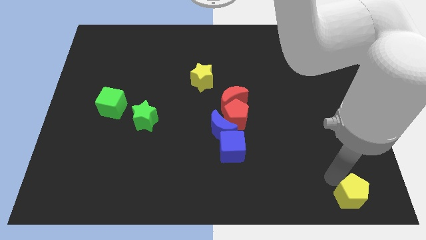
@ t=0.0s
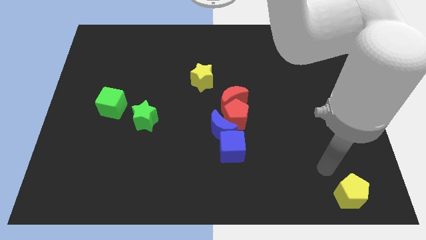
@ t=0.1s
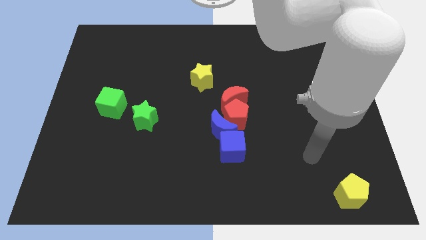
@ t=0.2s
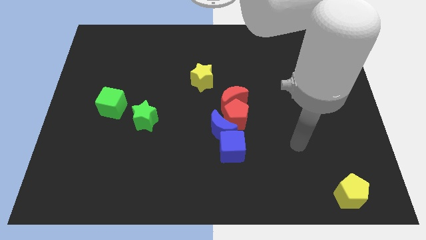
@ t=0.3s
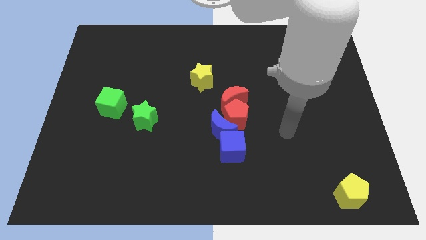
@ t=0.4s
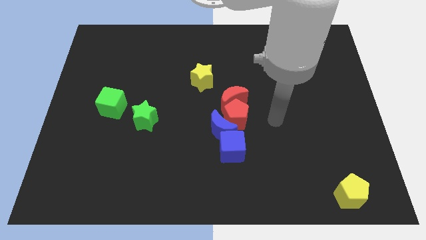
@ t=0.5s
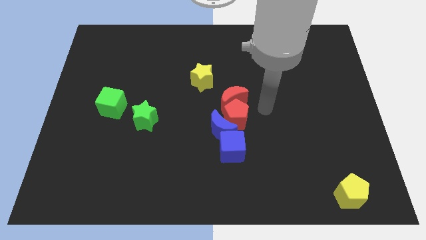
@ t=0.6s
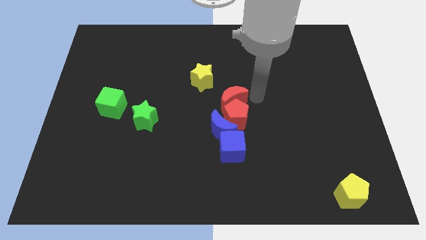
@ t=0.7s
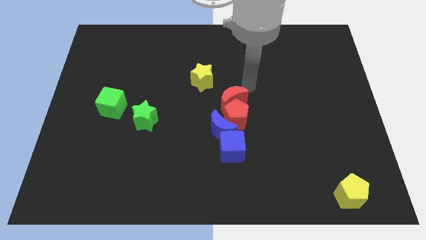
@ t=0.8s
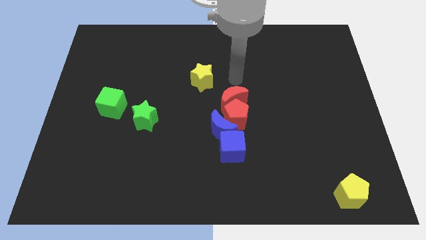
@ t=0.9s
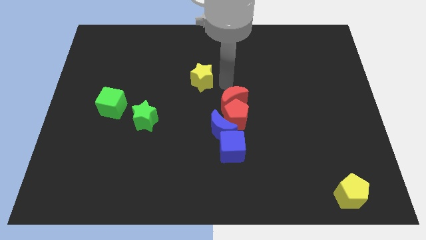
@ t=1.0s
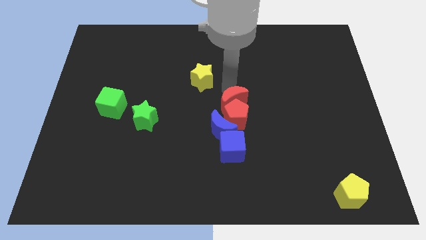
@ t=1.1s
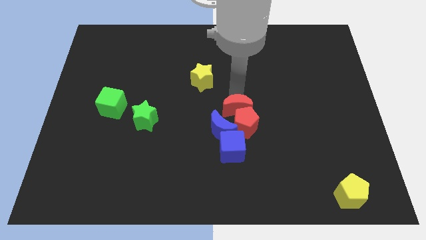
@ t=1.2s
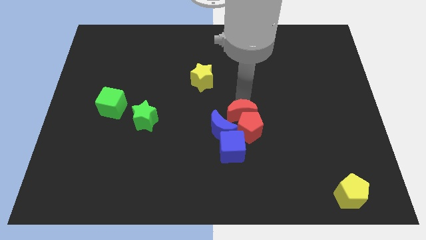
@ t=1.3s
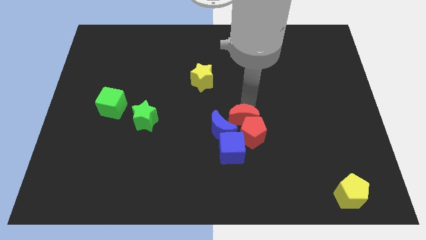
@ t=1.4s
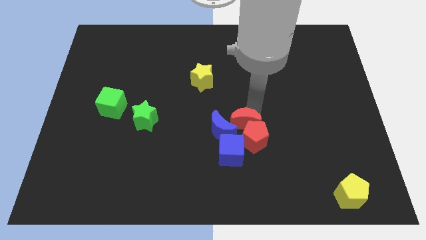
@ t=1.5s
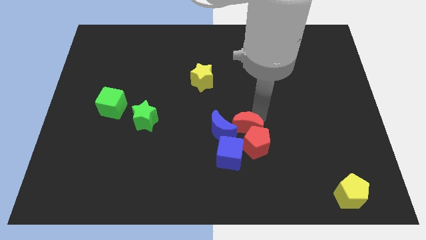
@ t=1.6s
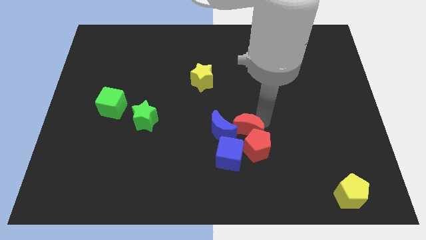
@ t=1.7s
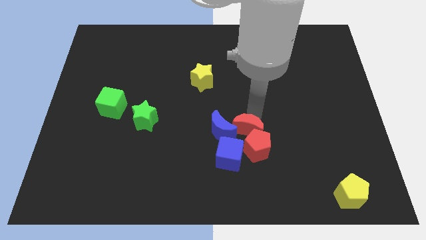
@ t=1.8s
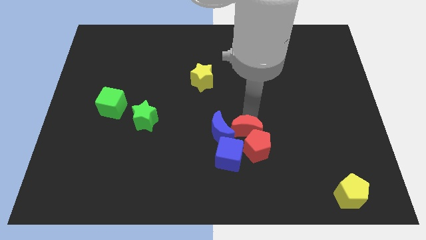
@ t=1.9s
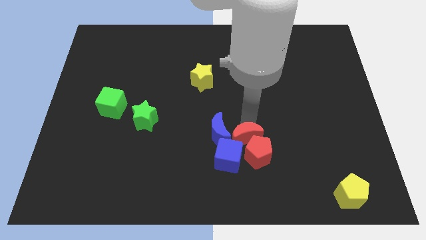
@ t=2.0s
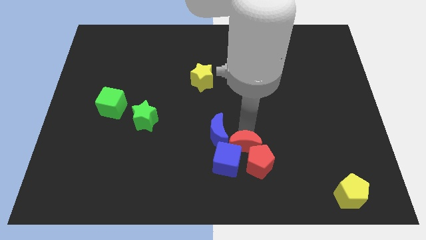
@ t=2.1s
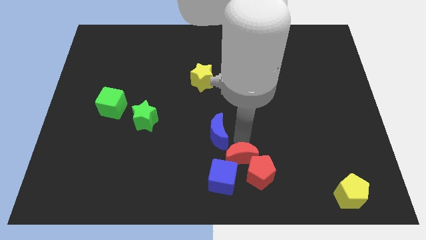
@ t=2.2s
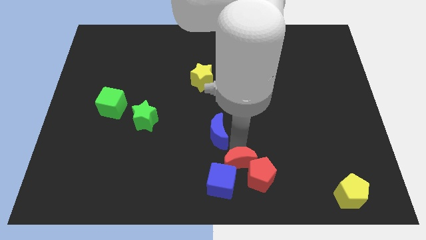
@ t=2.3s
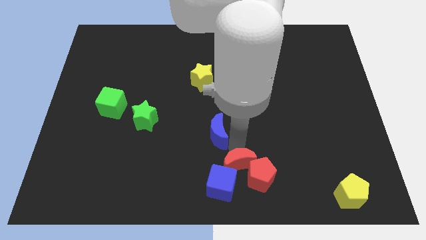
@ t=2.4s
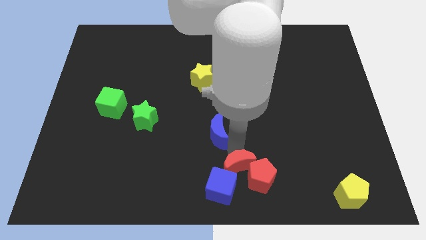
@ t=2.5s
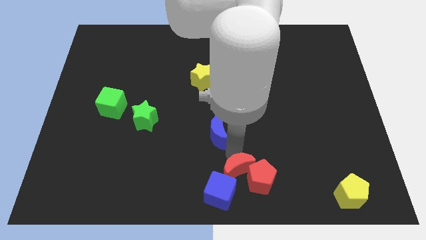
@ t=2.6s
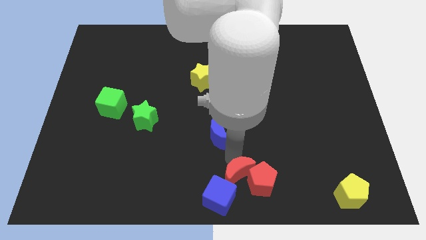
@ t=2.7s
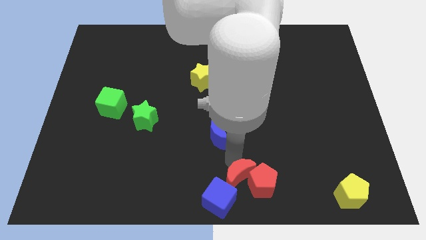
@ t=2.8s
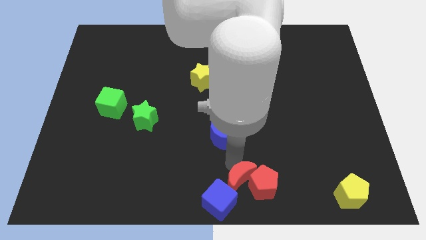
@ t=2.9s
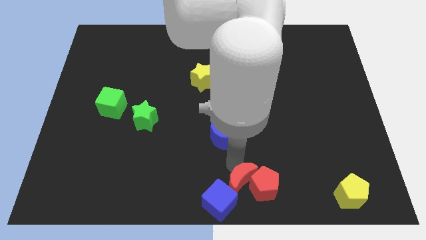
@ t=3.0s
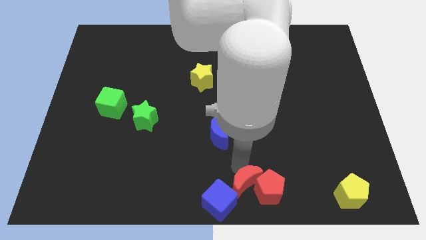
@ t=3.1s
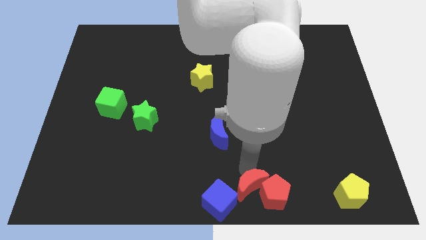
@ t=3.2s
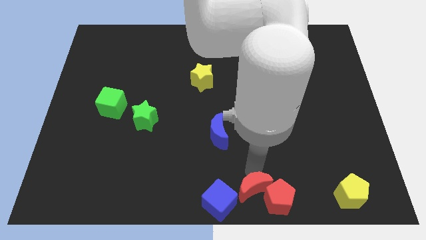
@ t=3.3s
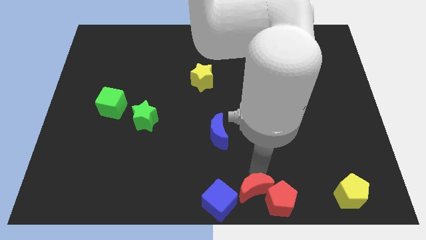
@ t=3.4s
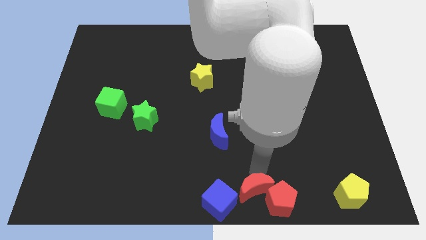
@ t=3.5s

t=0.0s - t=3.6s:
push the red blocks to the right of the blue cube

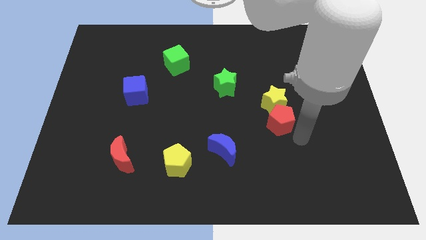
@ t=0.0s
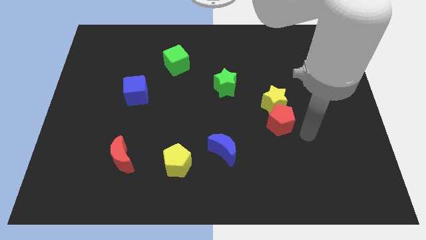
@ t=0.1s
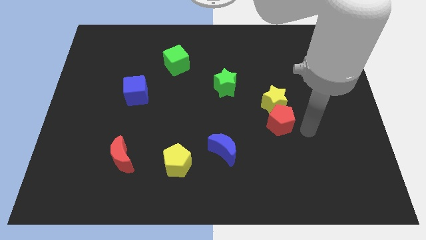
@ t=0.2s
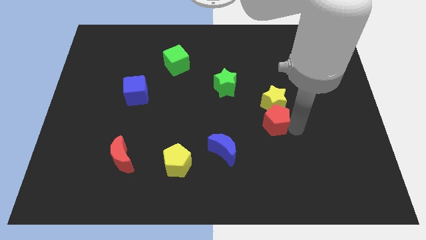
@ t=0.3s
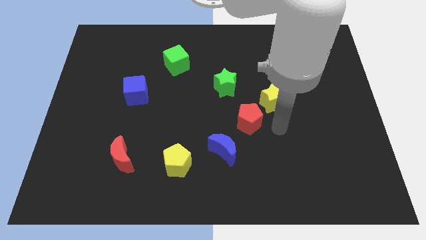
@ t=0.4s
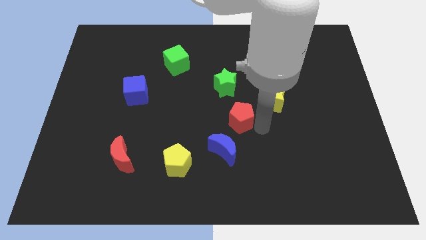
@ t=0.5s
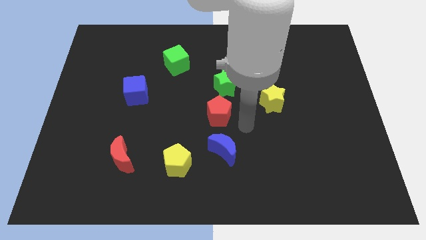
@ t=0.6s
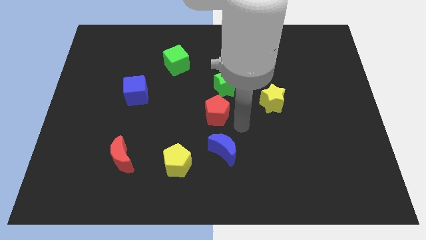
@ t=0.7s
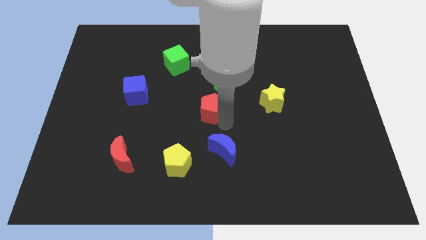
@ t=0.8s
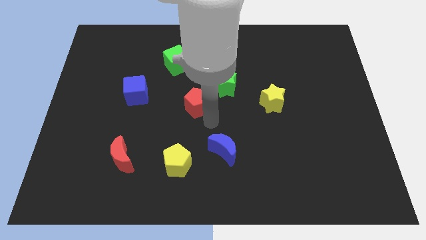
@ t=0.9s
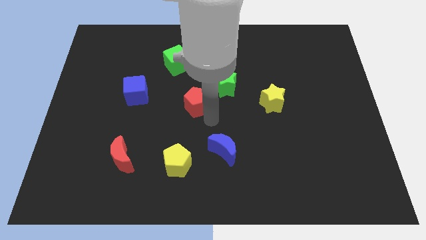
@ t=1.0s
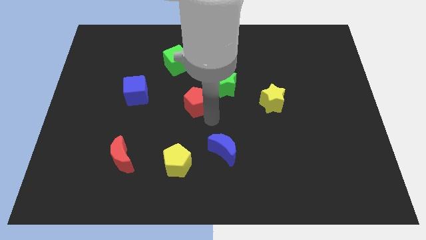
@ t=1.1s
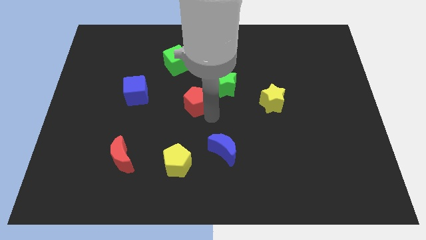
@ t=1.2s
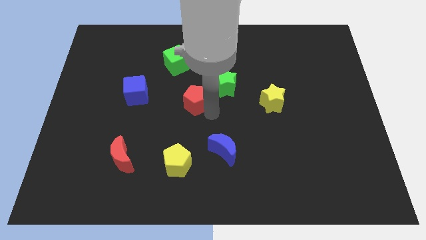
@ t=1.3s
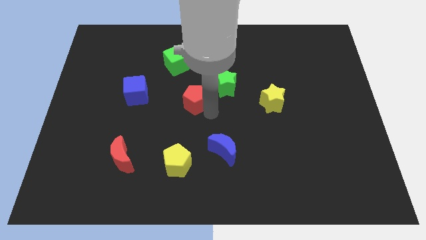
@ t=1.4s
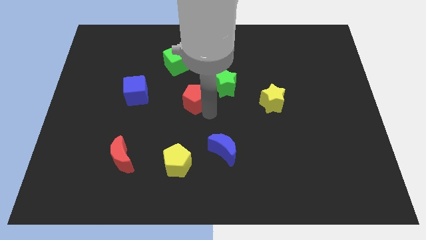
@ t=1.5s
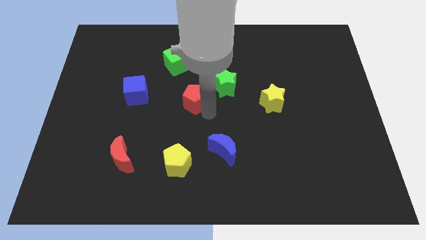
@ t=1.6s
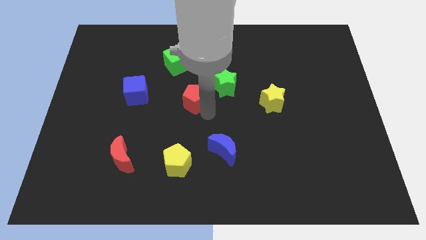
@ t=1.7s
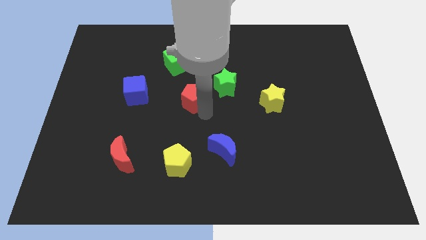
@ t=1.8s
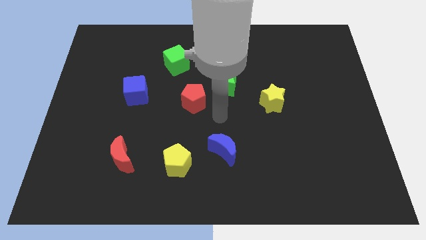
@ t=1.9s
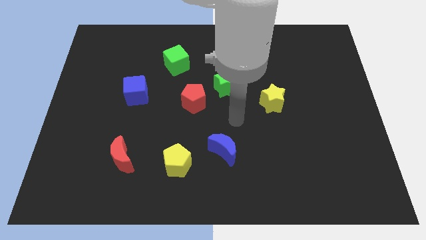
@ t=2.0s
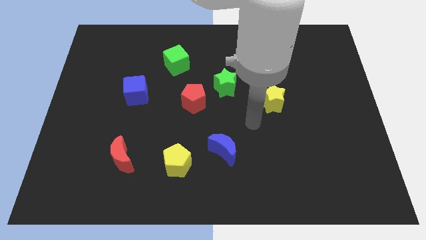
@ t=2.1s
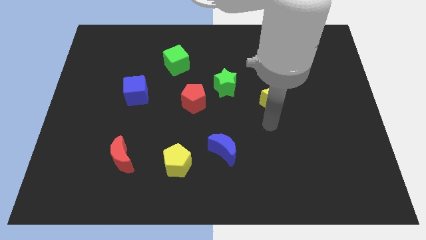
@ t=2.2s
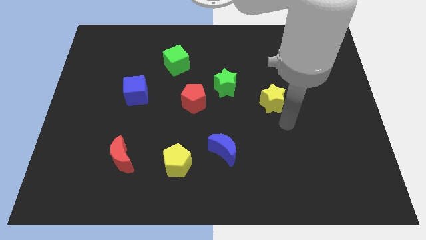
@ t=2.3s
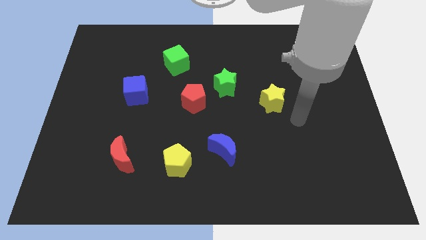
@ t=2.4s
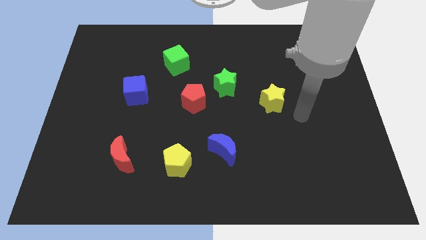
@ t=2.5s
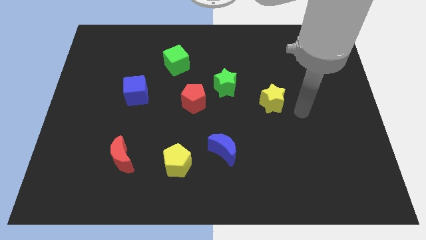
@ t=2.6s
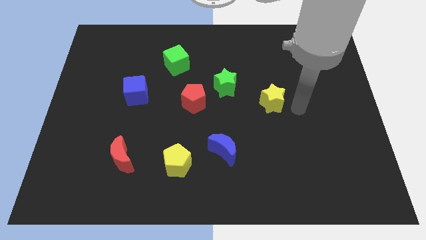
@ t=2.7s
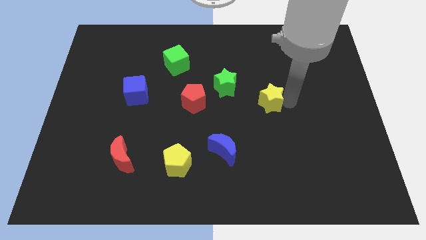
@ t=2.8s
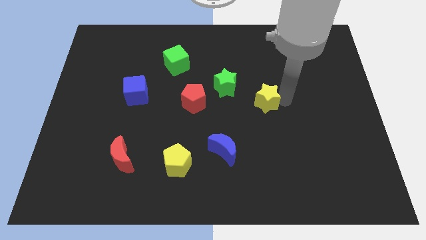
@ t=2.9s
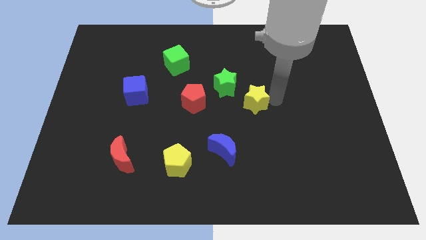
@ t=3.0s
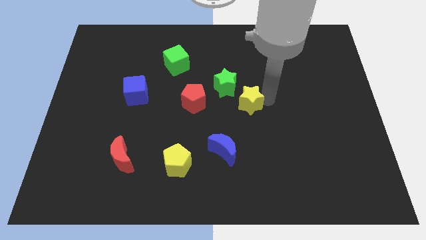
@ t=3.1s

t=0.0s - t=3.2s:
slide the red pentagon and yellow star horizontal to each other

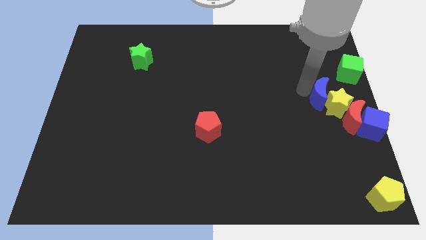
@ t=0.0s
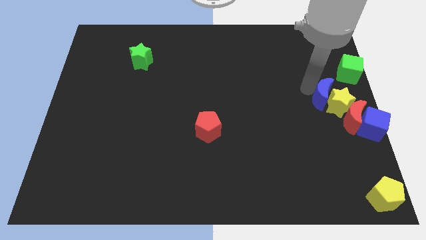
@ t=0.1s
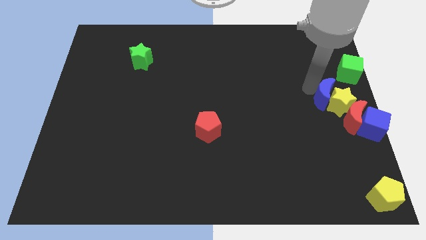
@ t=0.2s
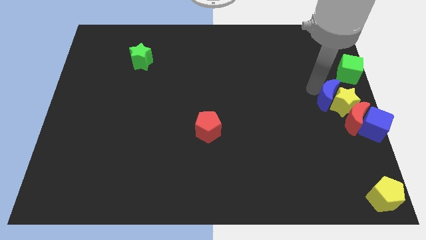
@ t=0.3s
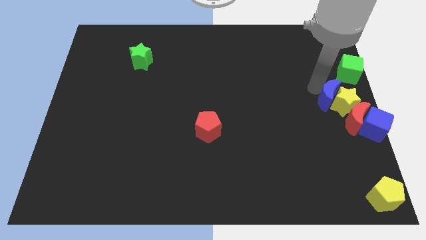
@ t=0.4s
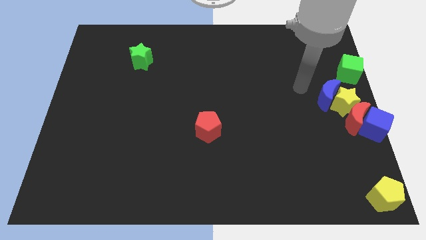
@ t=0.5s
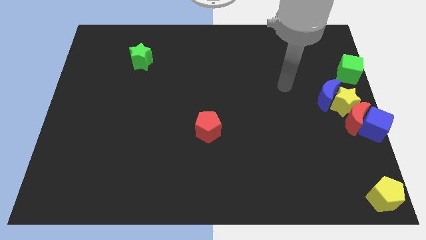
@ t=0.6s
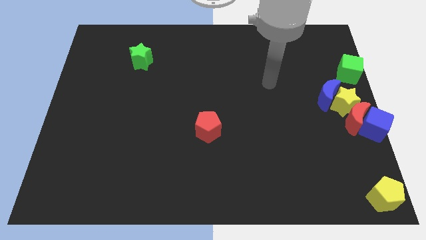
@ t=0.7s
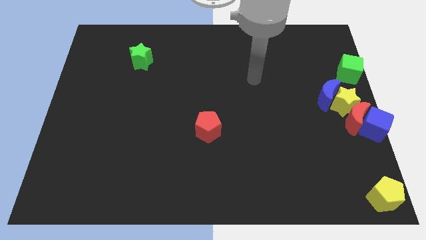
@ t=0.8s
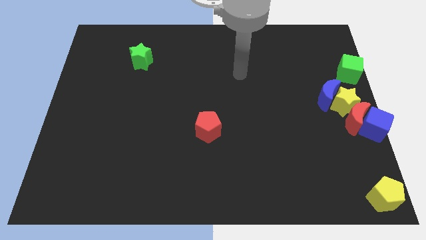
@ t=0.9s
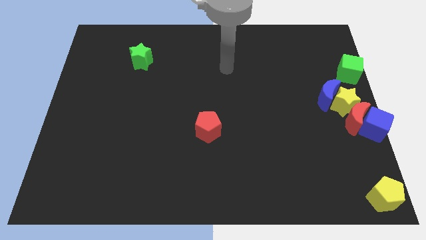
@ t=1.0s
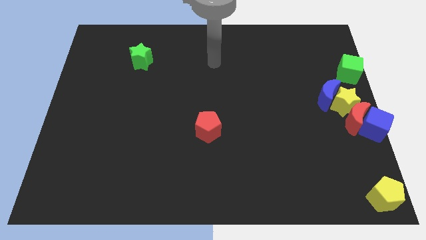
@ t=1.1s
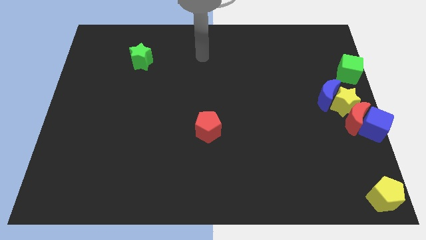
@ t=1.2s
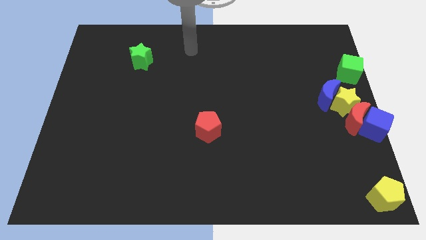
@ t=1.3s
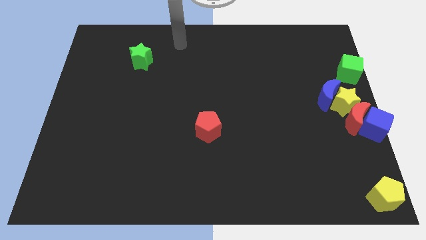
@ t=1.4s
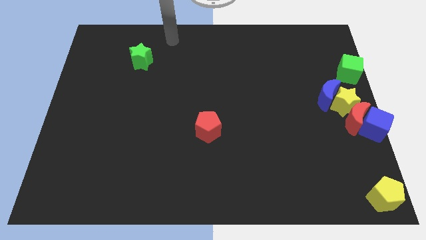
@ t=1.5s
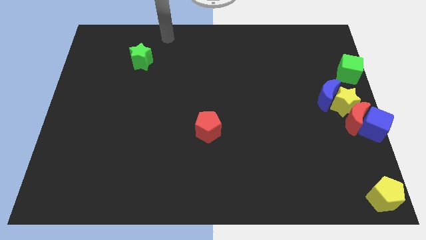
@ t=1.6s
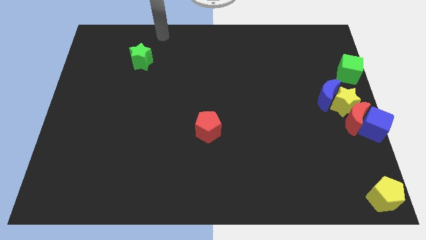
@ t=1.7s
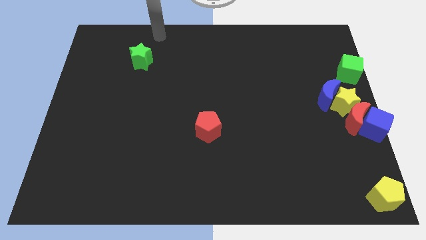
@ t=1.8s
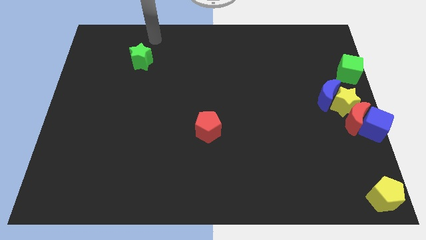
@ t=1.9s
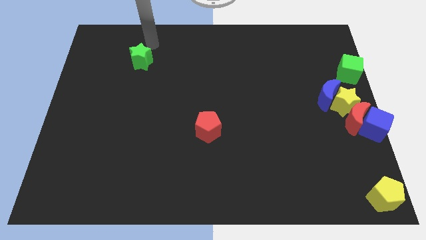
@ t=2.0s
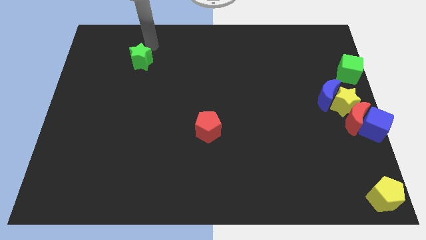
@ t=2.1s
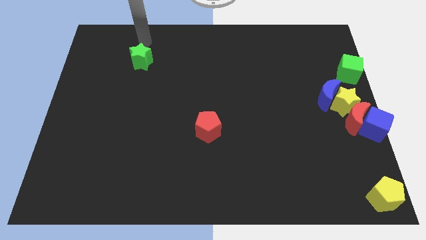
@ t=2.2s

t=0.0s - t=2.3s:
move your arm to the top of the green star
